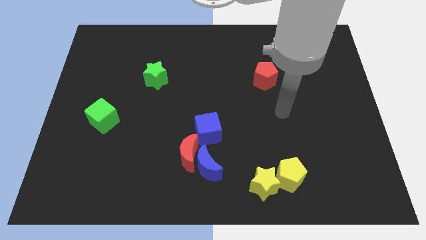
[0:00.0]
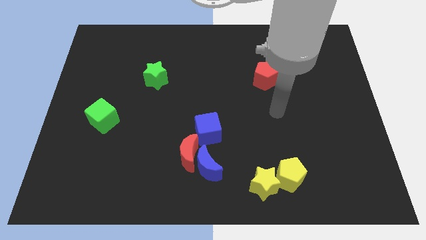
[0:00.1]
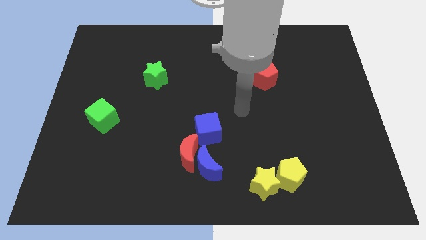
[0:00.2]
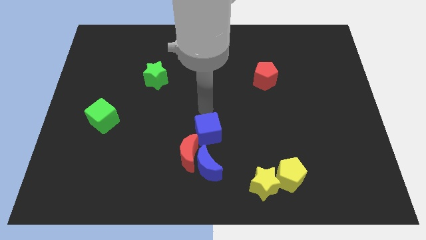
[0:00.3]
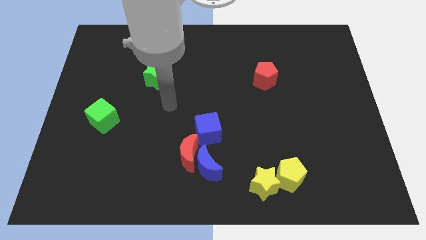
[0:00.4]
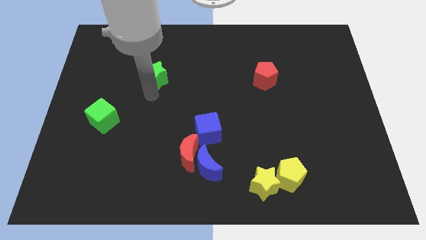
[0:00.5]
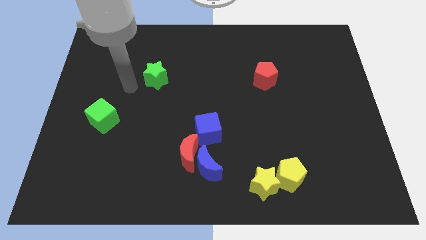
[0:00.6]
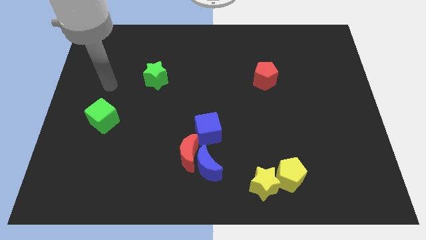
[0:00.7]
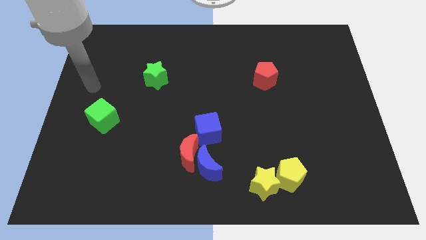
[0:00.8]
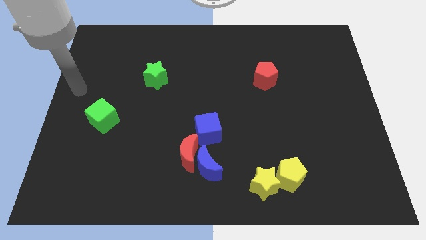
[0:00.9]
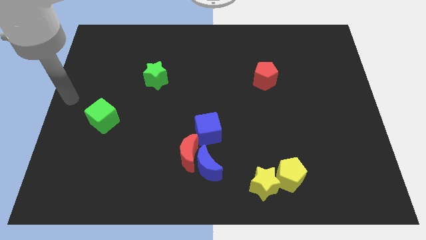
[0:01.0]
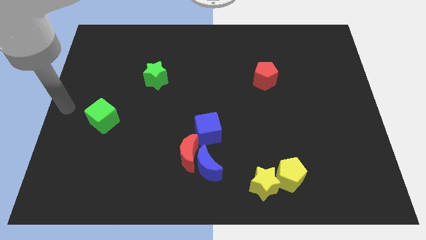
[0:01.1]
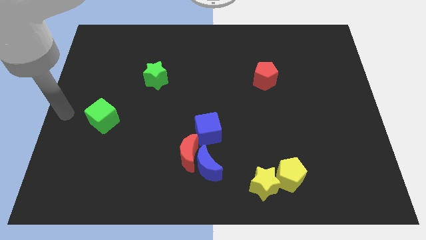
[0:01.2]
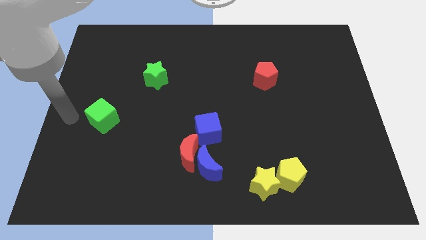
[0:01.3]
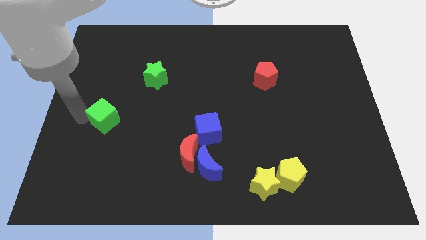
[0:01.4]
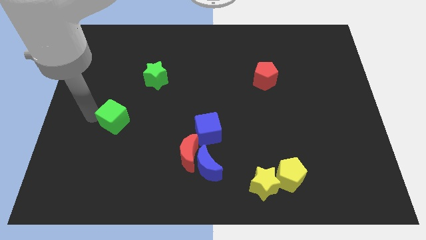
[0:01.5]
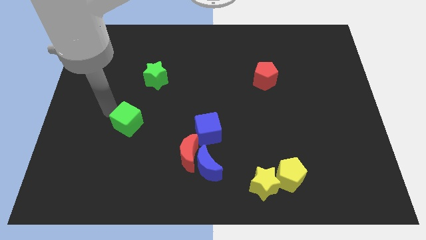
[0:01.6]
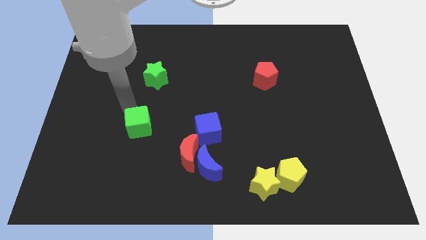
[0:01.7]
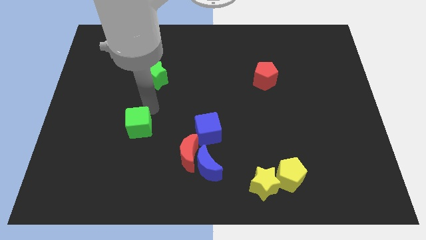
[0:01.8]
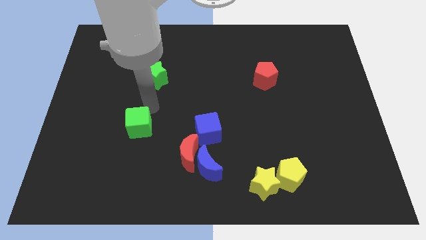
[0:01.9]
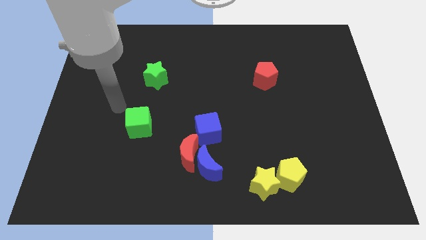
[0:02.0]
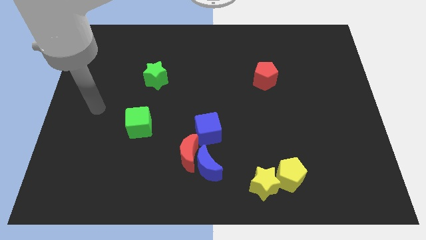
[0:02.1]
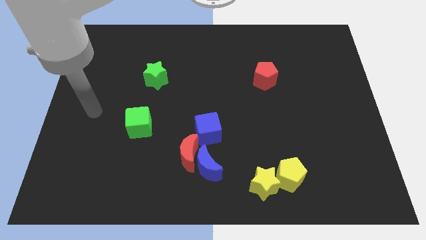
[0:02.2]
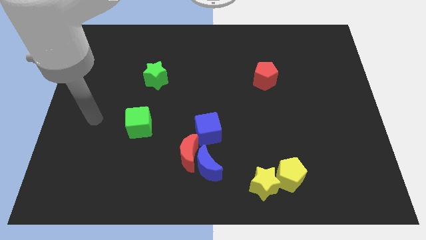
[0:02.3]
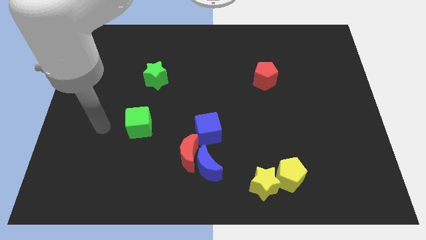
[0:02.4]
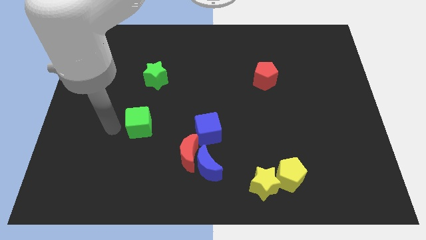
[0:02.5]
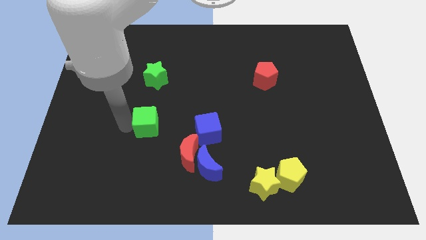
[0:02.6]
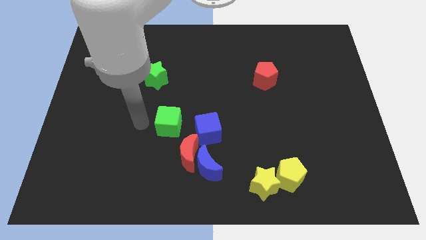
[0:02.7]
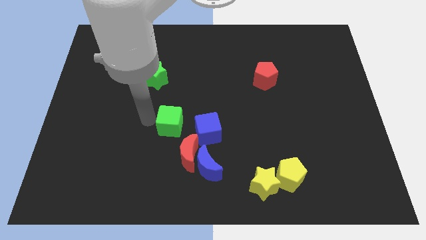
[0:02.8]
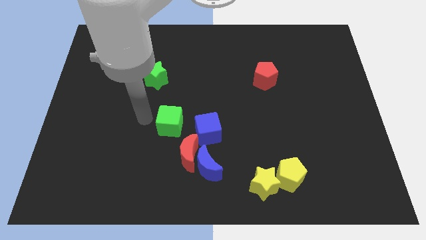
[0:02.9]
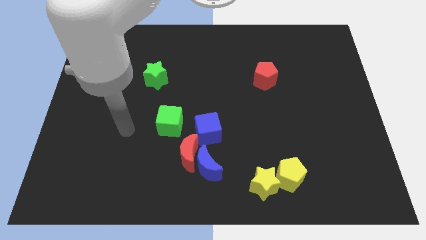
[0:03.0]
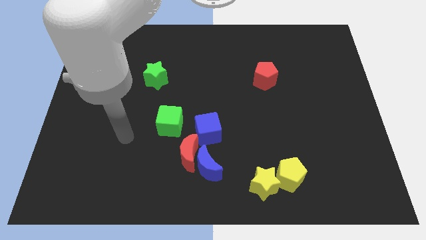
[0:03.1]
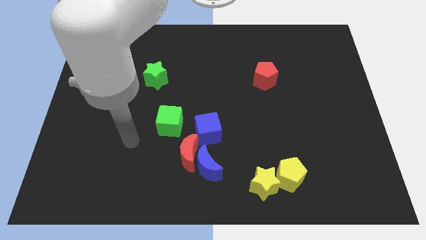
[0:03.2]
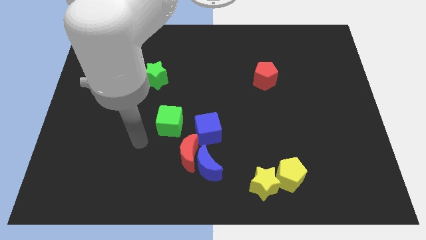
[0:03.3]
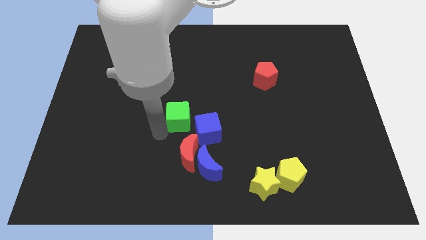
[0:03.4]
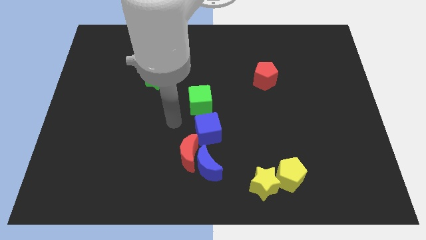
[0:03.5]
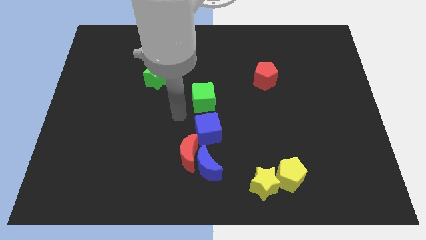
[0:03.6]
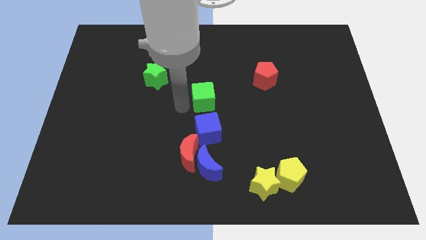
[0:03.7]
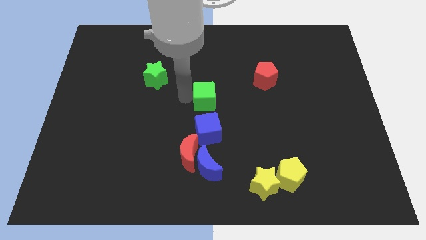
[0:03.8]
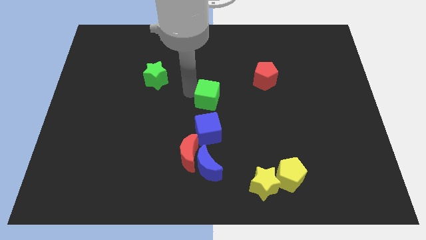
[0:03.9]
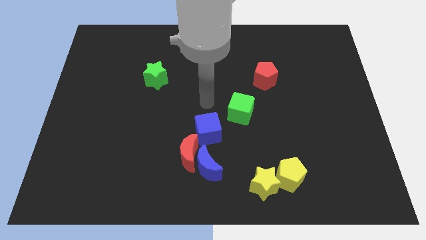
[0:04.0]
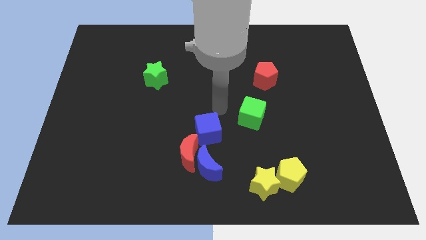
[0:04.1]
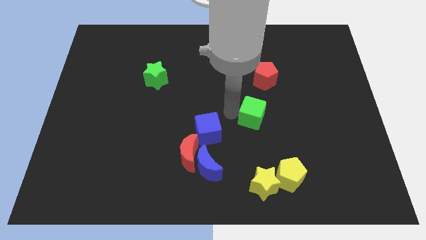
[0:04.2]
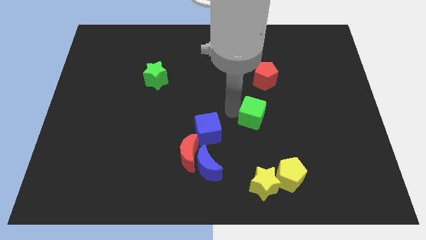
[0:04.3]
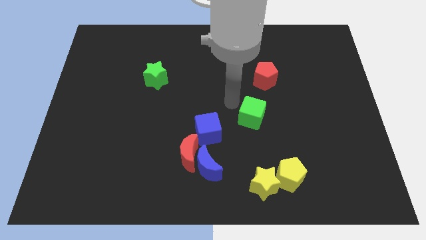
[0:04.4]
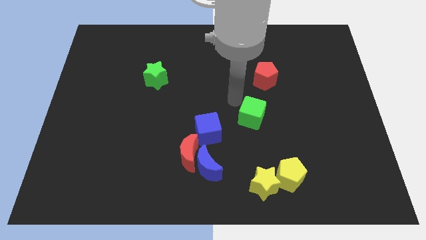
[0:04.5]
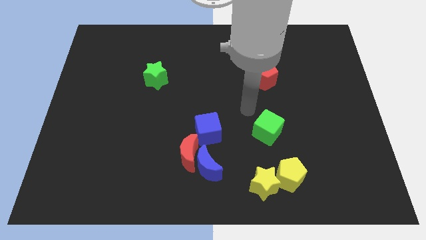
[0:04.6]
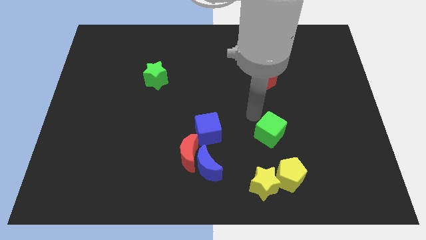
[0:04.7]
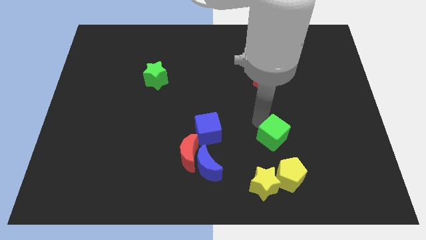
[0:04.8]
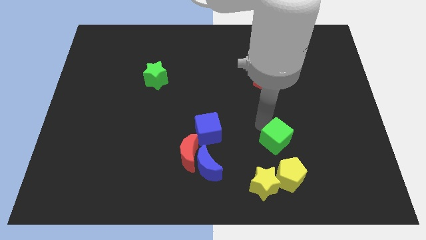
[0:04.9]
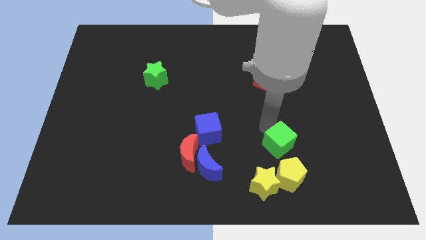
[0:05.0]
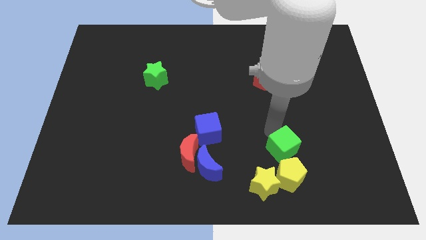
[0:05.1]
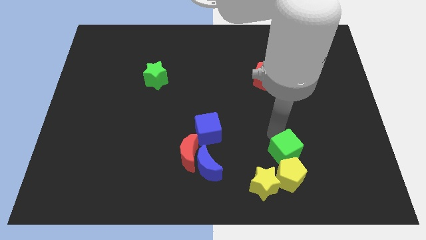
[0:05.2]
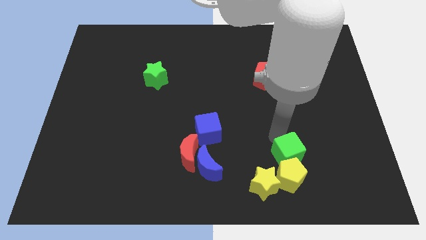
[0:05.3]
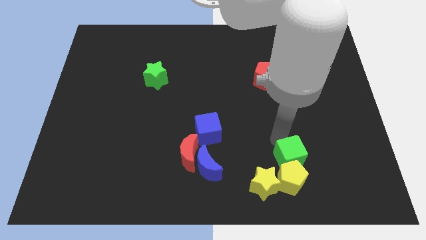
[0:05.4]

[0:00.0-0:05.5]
push the green cube towards the yellow pentagon

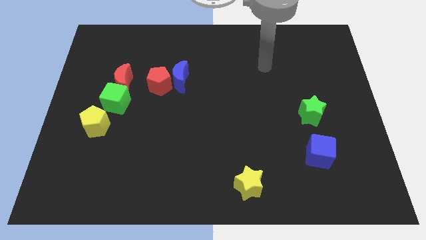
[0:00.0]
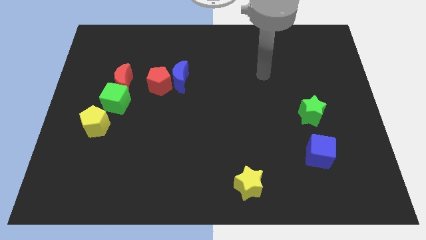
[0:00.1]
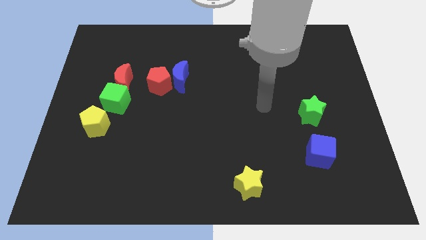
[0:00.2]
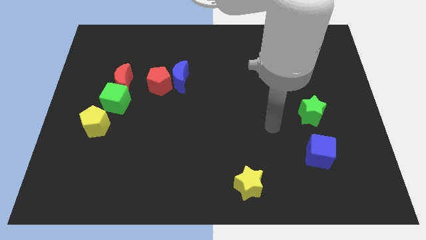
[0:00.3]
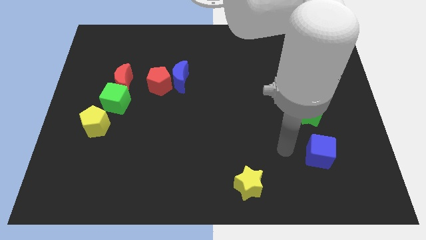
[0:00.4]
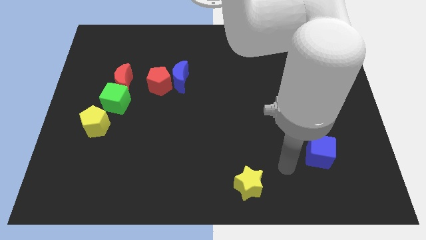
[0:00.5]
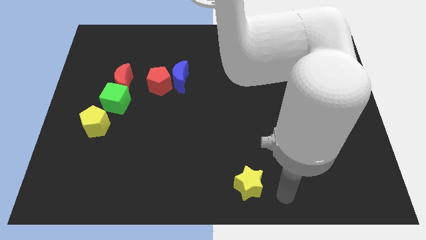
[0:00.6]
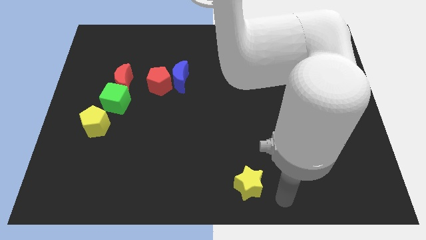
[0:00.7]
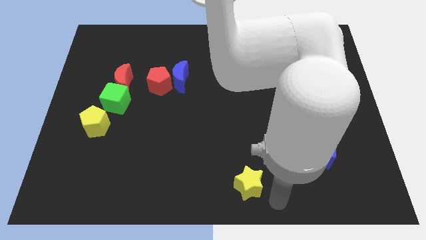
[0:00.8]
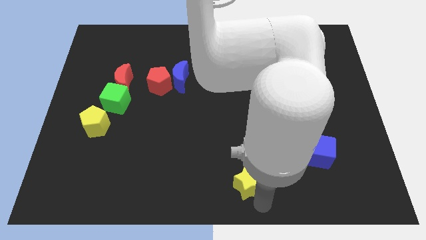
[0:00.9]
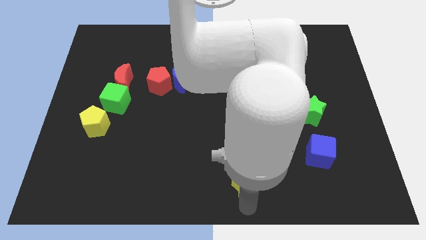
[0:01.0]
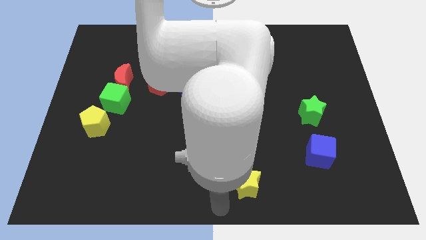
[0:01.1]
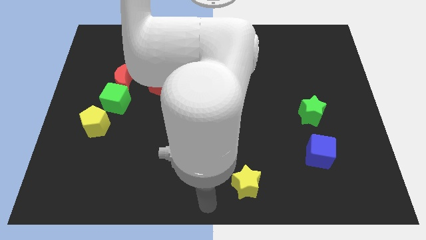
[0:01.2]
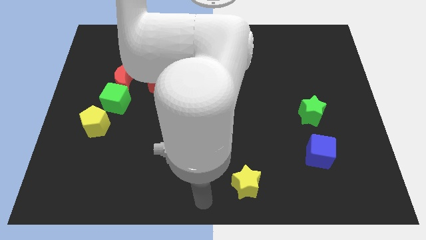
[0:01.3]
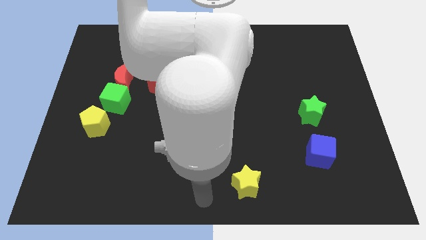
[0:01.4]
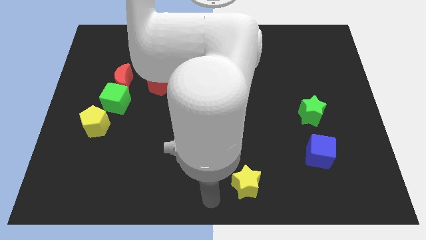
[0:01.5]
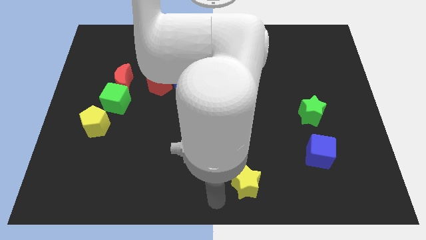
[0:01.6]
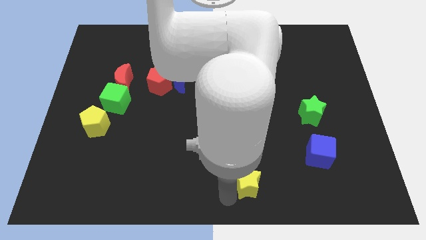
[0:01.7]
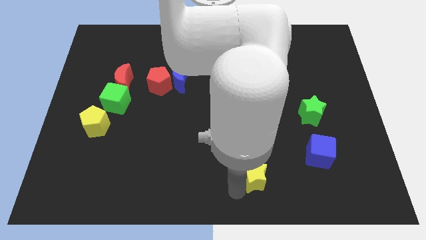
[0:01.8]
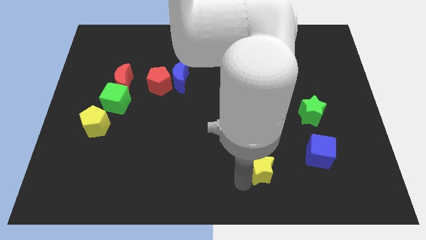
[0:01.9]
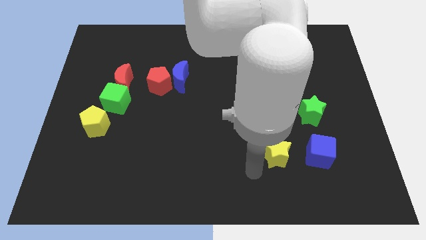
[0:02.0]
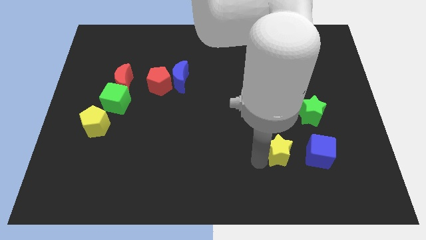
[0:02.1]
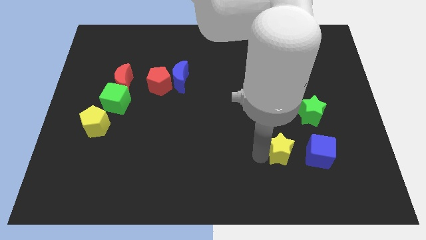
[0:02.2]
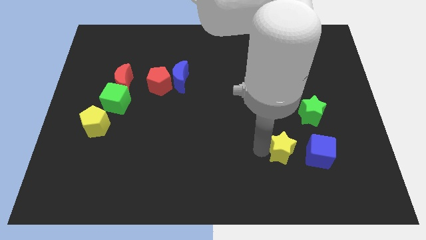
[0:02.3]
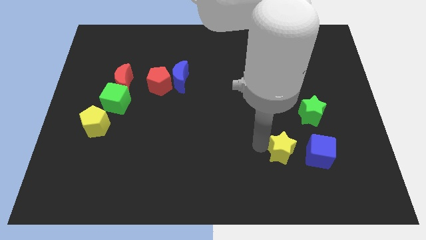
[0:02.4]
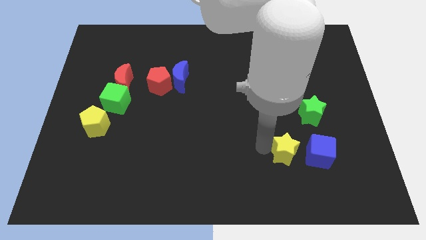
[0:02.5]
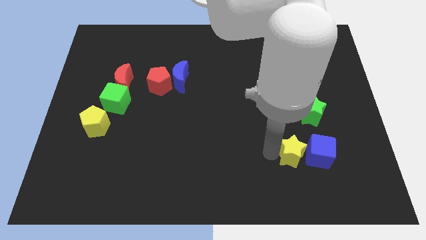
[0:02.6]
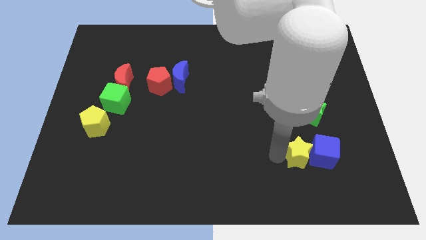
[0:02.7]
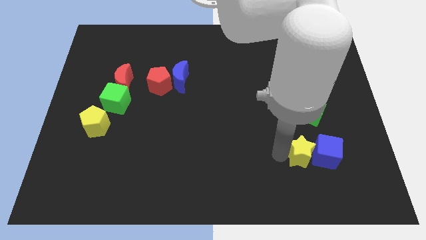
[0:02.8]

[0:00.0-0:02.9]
slide the yellow star to the blue cube

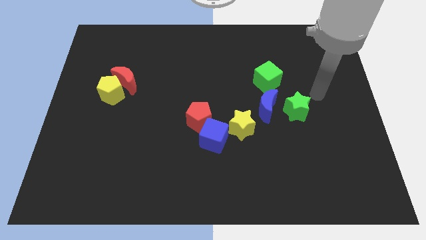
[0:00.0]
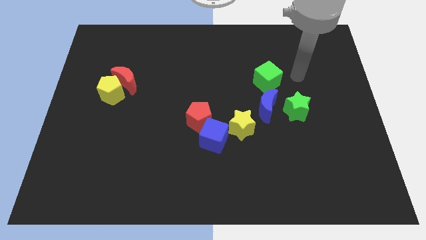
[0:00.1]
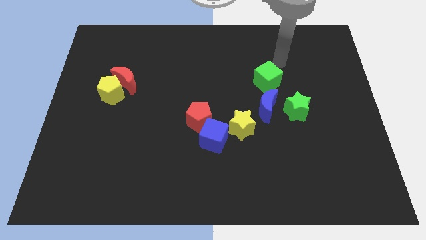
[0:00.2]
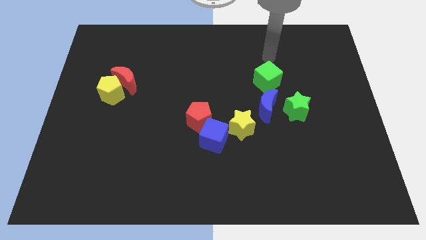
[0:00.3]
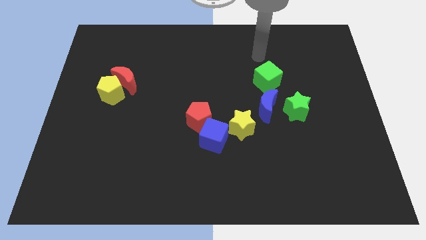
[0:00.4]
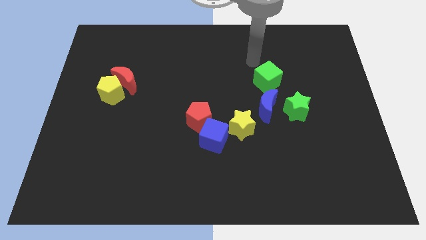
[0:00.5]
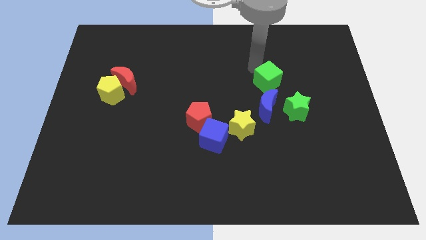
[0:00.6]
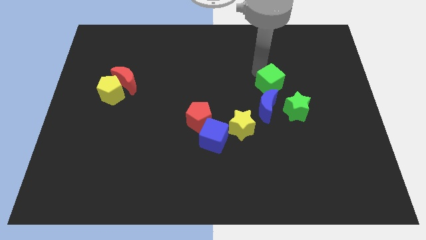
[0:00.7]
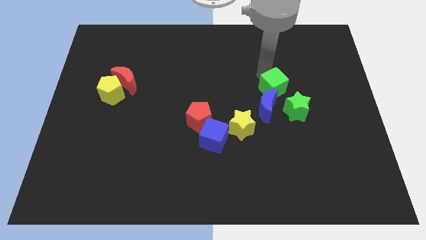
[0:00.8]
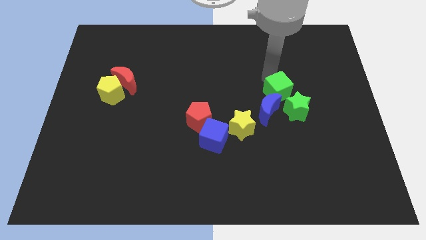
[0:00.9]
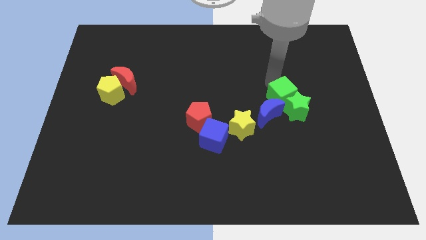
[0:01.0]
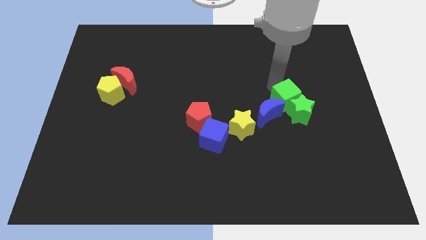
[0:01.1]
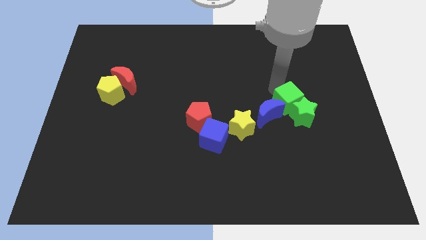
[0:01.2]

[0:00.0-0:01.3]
slide the green cube towards the green star
